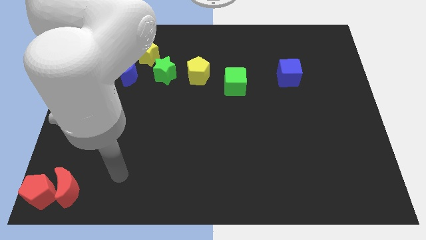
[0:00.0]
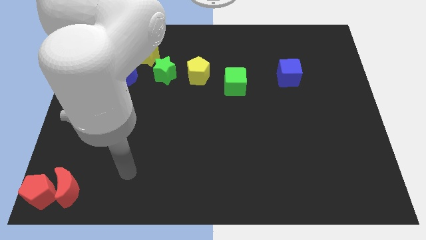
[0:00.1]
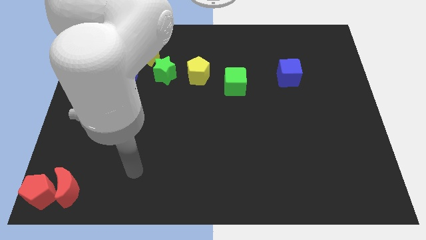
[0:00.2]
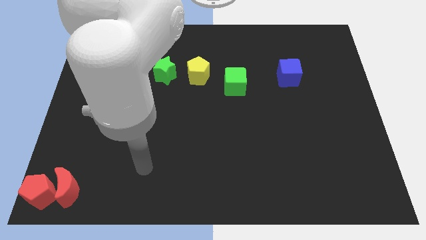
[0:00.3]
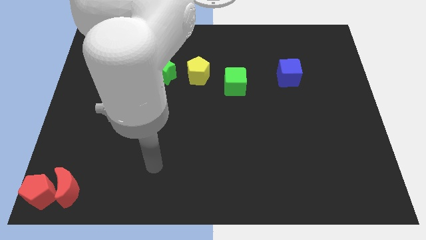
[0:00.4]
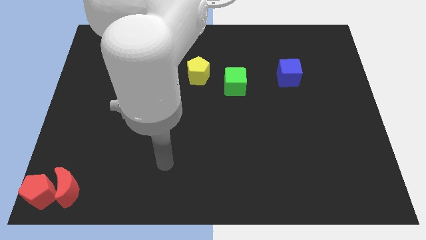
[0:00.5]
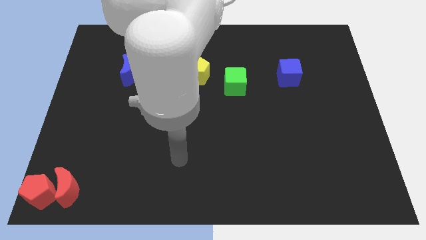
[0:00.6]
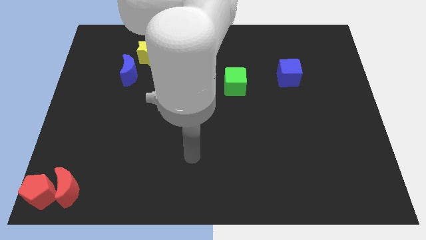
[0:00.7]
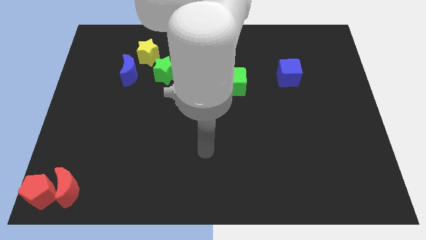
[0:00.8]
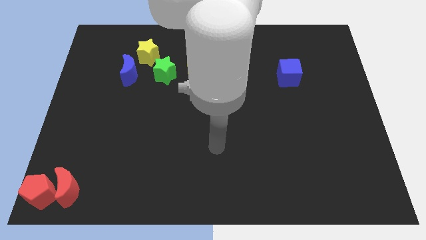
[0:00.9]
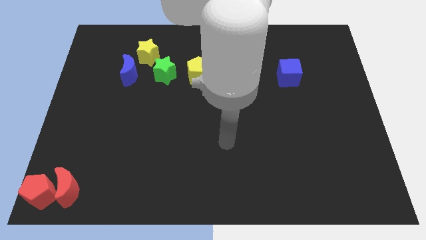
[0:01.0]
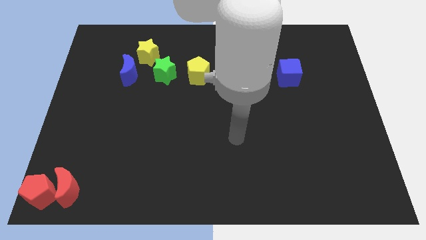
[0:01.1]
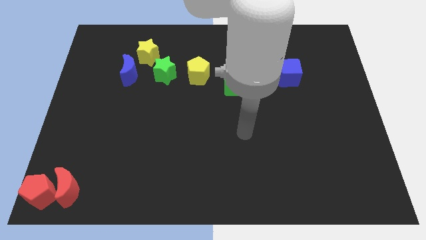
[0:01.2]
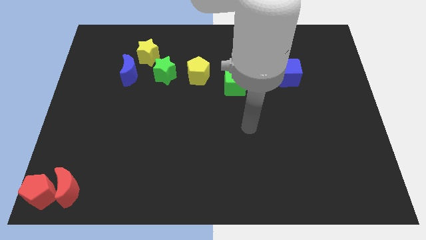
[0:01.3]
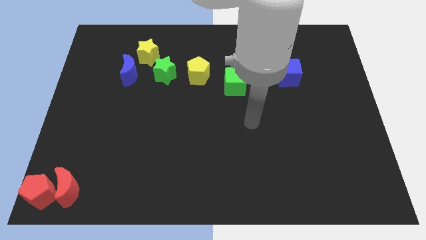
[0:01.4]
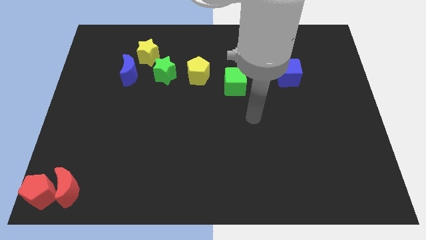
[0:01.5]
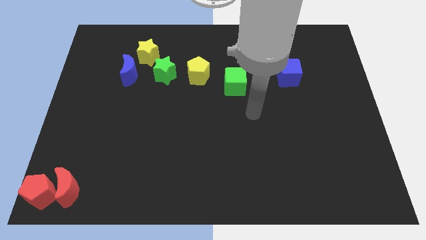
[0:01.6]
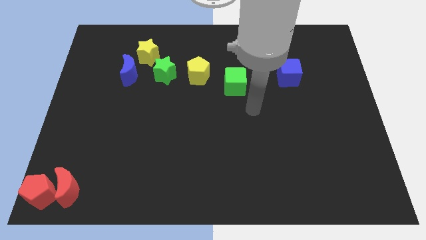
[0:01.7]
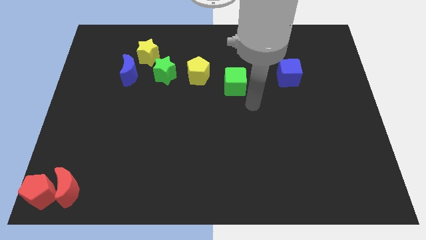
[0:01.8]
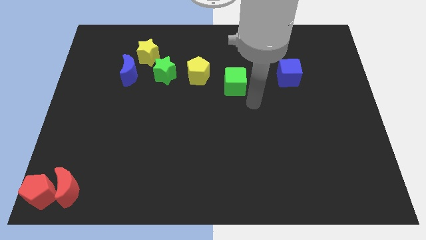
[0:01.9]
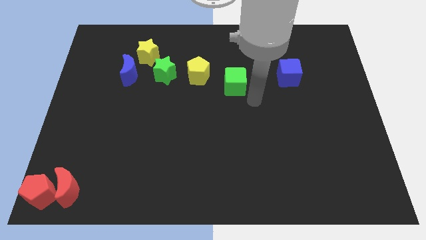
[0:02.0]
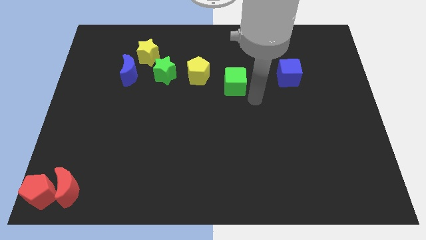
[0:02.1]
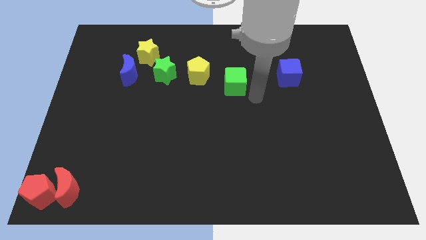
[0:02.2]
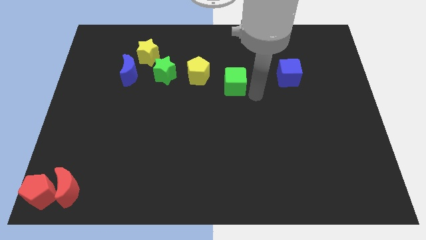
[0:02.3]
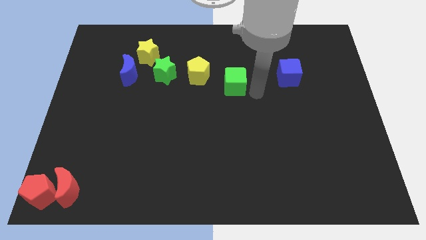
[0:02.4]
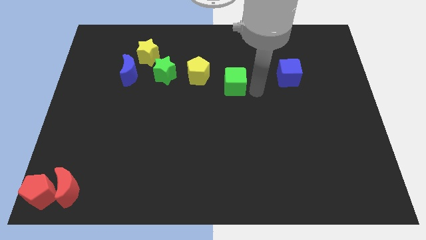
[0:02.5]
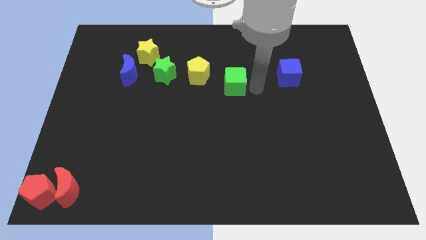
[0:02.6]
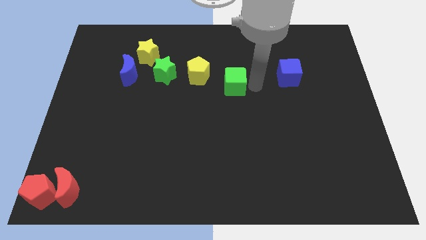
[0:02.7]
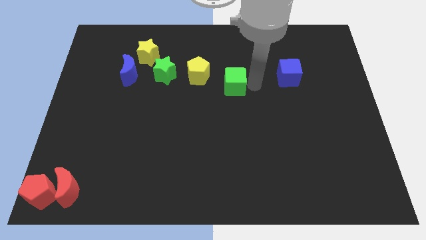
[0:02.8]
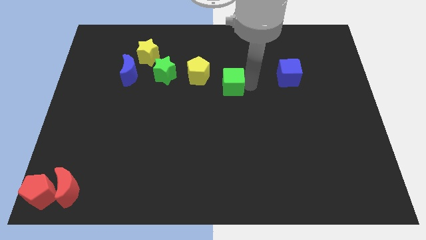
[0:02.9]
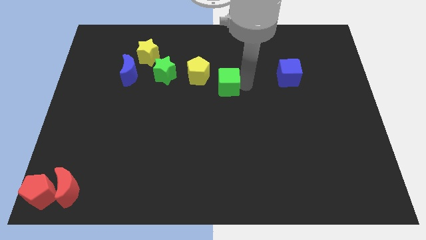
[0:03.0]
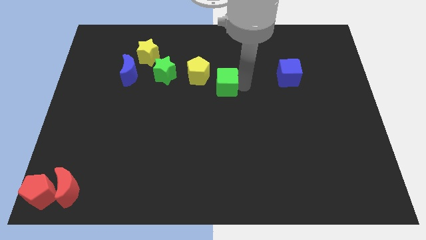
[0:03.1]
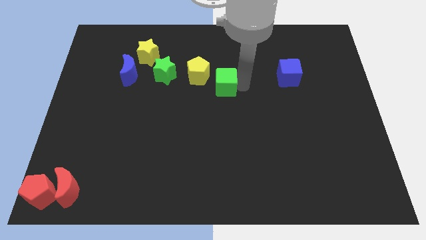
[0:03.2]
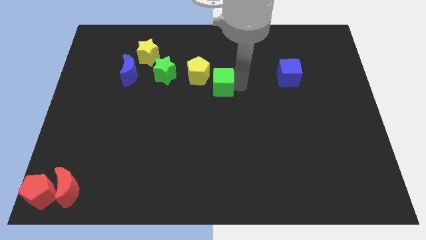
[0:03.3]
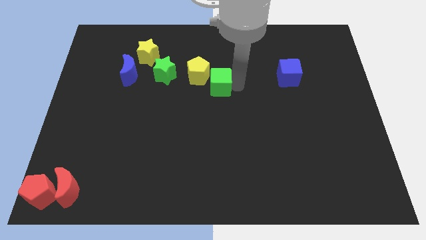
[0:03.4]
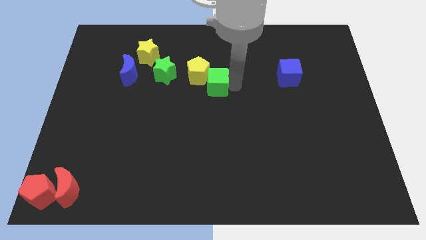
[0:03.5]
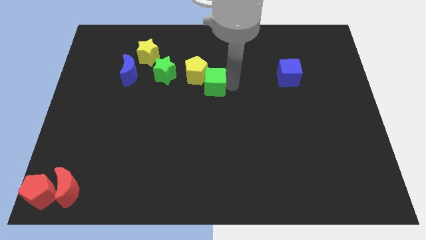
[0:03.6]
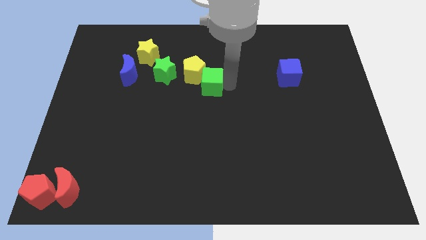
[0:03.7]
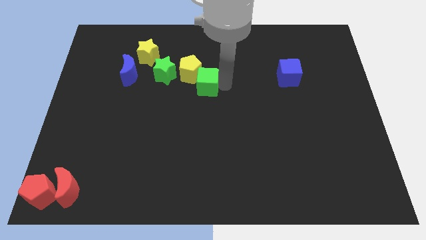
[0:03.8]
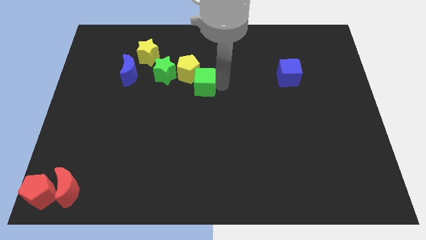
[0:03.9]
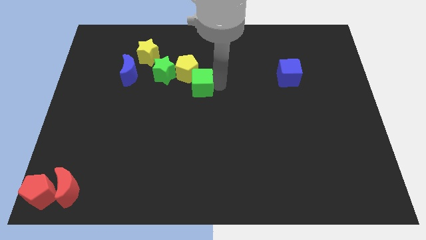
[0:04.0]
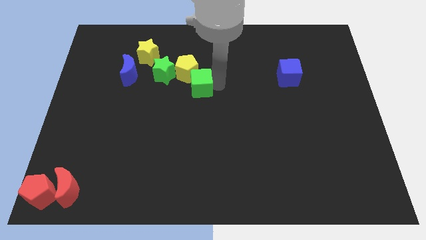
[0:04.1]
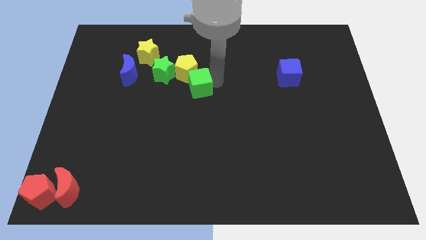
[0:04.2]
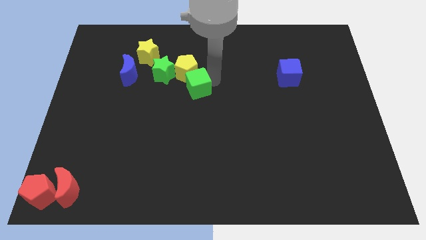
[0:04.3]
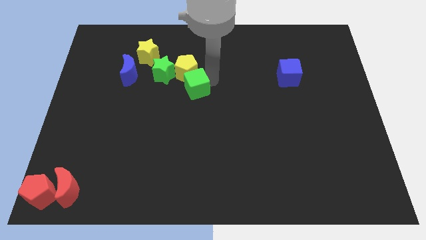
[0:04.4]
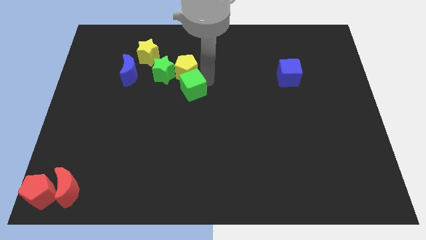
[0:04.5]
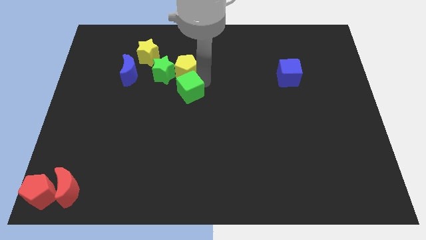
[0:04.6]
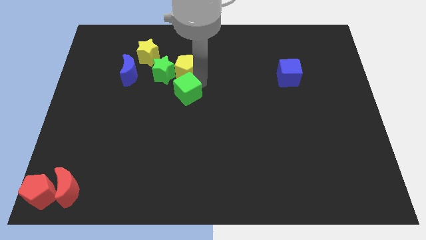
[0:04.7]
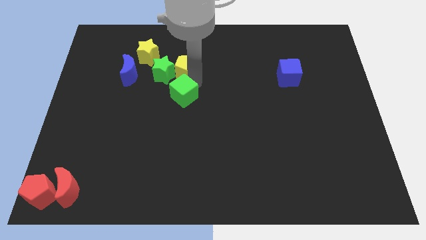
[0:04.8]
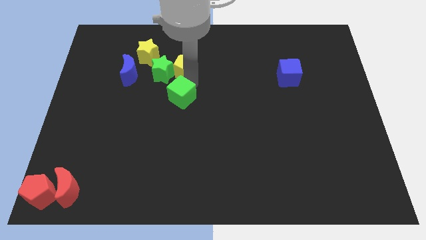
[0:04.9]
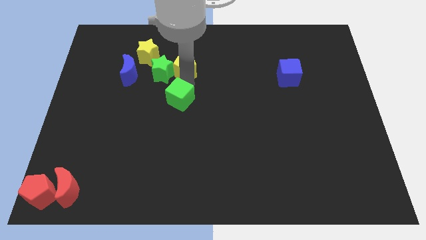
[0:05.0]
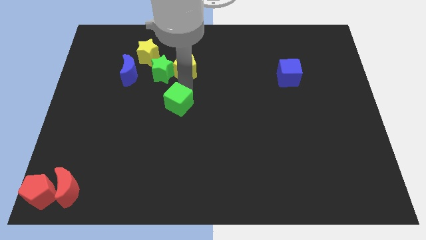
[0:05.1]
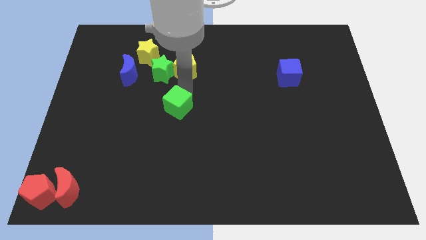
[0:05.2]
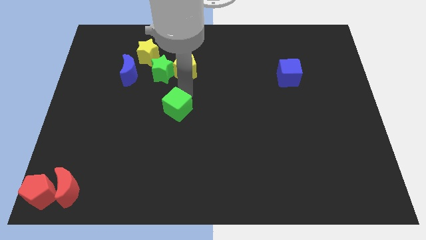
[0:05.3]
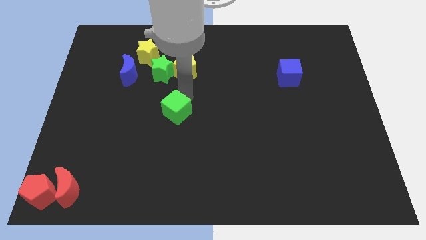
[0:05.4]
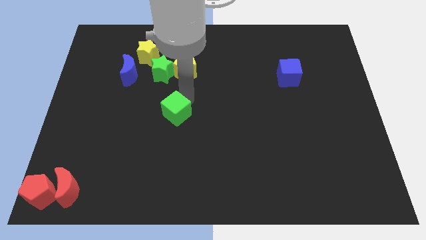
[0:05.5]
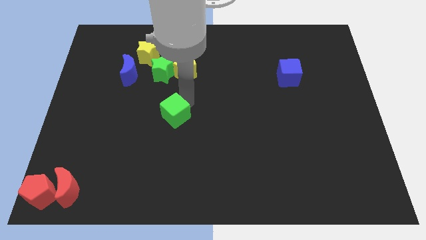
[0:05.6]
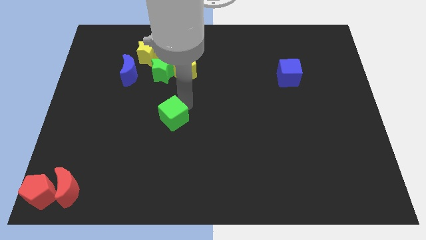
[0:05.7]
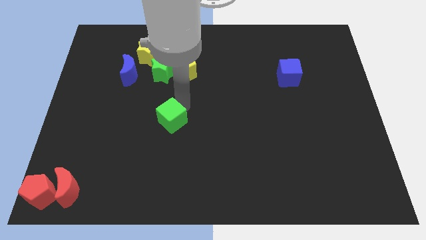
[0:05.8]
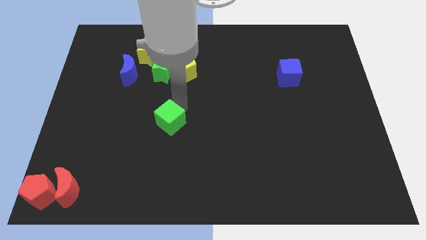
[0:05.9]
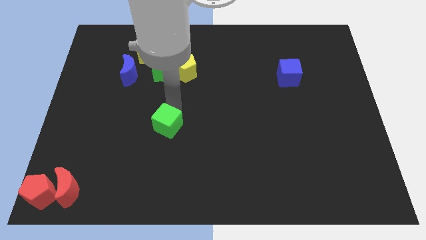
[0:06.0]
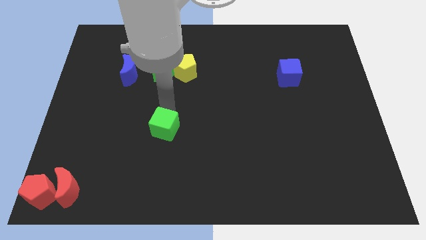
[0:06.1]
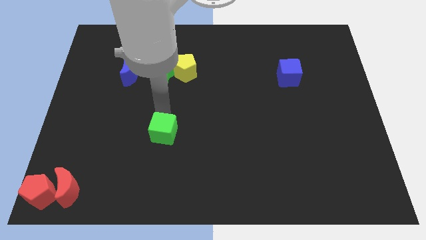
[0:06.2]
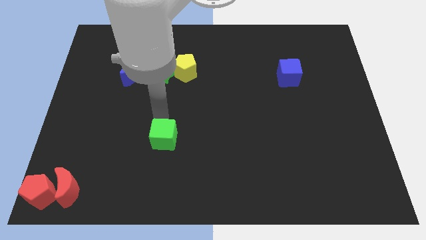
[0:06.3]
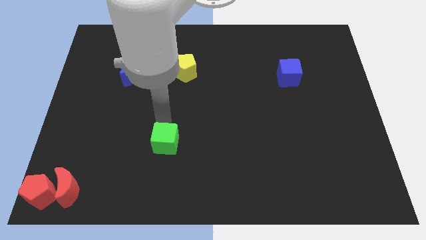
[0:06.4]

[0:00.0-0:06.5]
put the green cube vertically below the yellow pentagaon

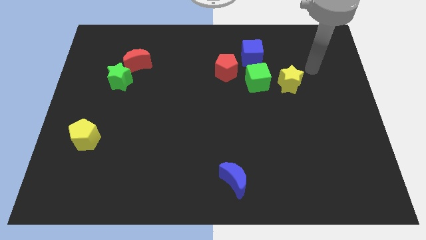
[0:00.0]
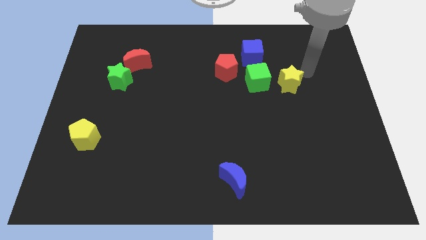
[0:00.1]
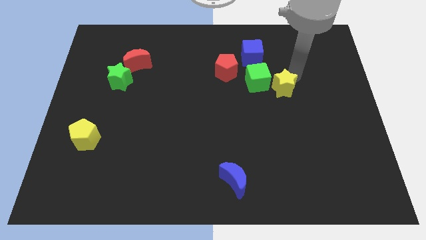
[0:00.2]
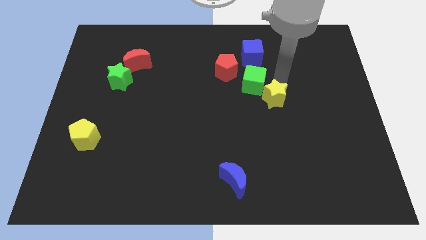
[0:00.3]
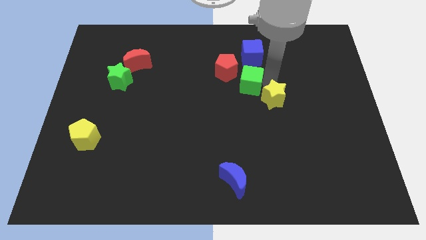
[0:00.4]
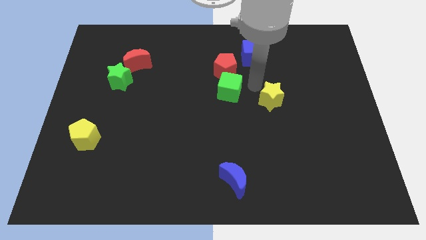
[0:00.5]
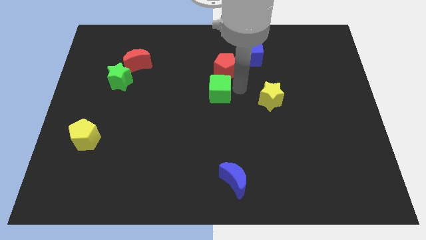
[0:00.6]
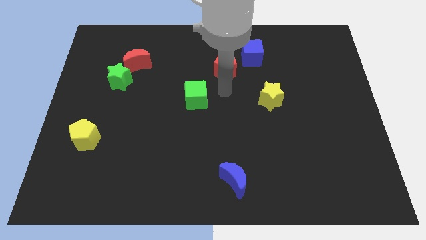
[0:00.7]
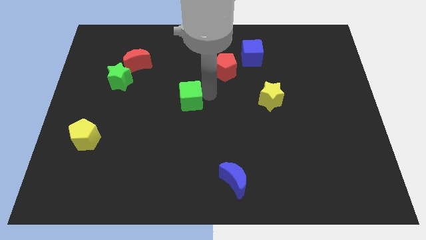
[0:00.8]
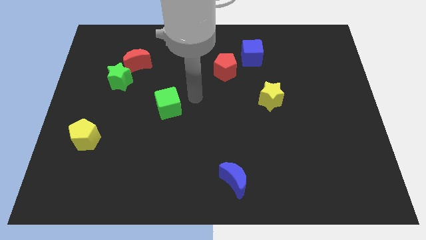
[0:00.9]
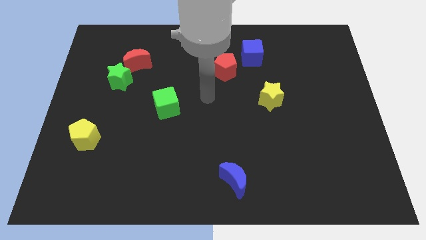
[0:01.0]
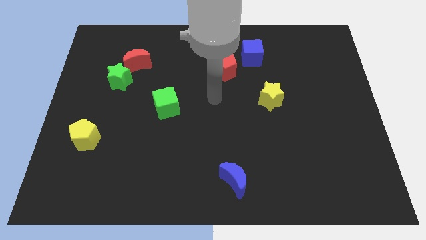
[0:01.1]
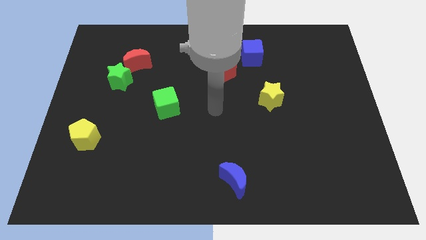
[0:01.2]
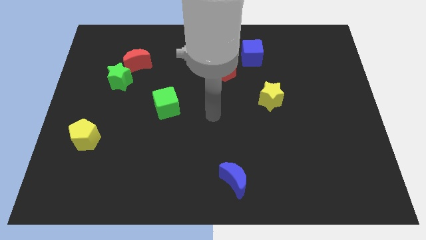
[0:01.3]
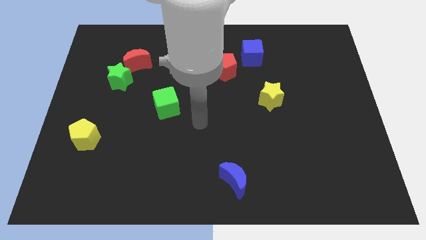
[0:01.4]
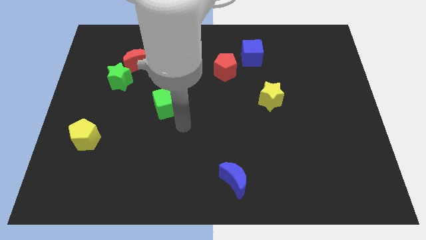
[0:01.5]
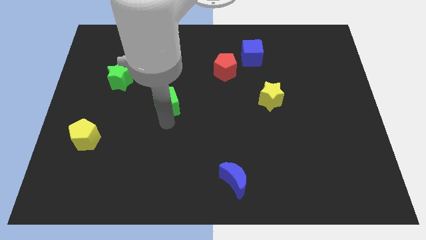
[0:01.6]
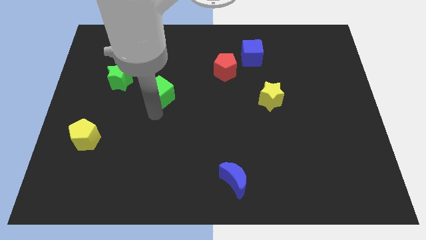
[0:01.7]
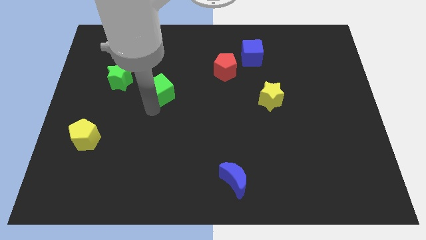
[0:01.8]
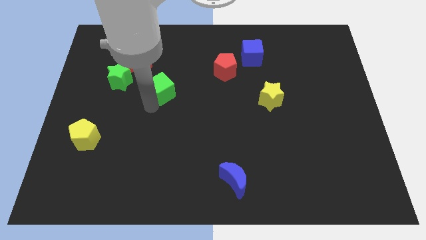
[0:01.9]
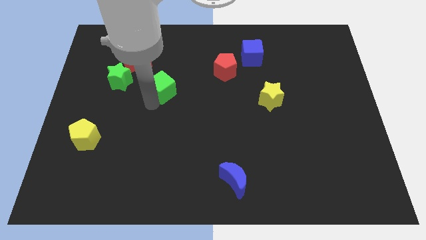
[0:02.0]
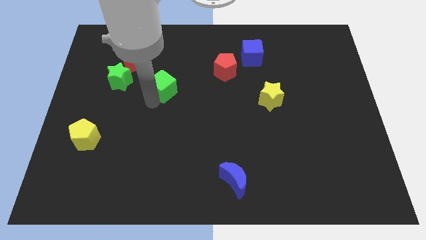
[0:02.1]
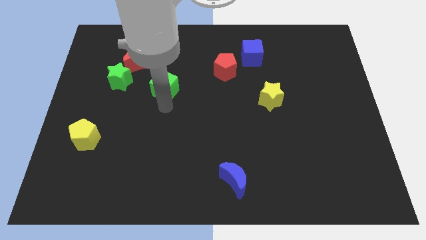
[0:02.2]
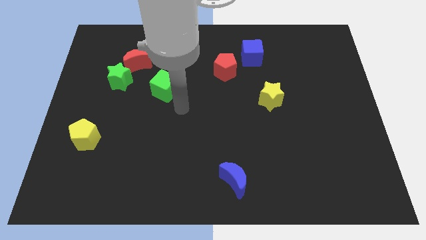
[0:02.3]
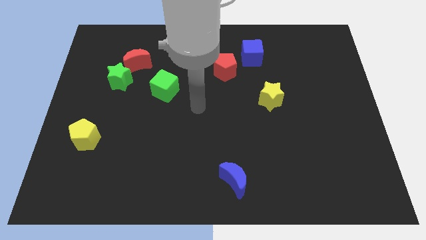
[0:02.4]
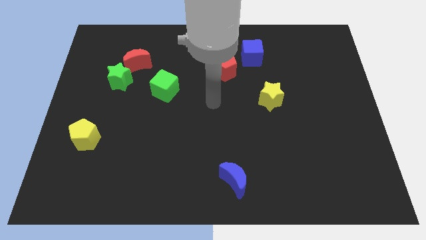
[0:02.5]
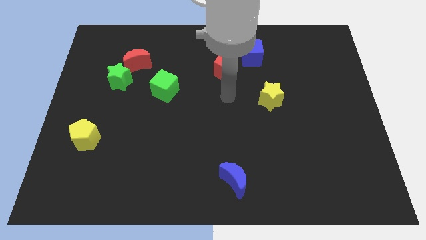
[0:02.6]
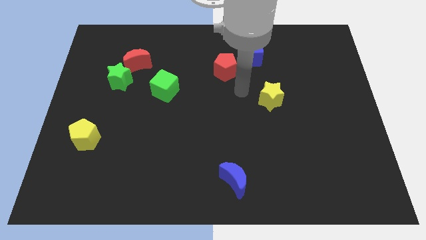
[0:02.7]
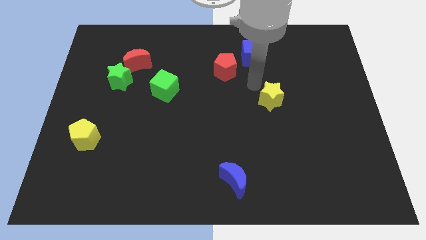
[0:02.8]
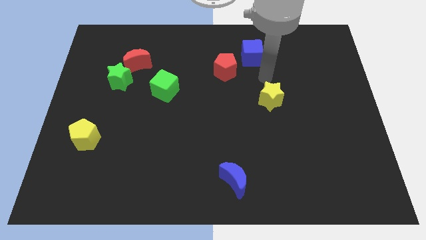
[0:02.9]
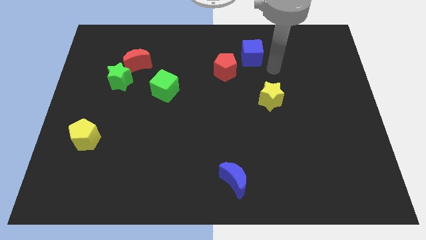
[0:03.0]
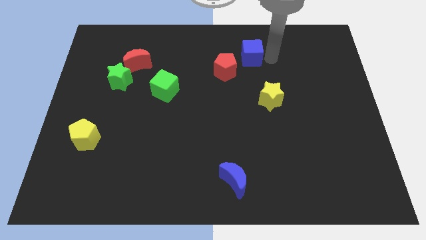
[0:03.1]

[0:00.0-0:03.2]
separate the green cube from a group of blocks
